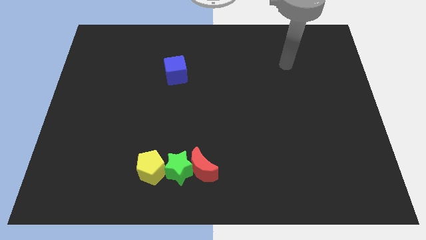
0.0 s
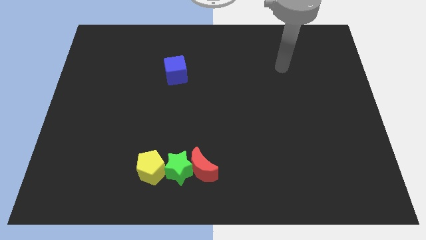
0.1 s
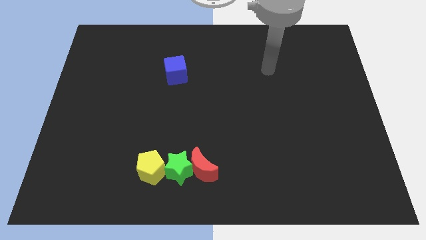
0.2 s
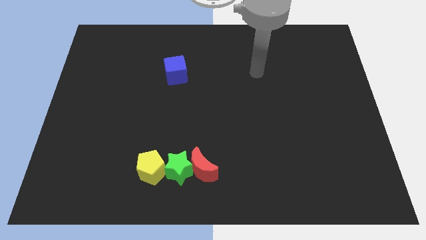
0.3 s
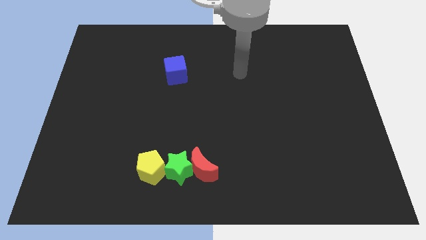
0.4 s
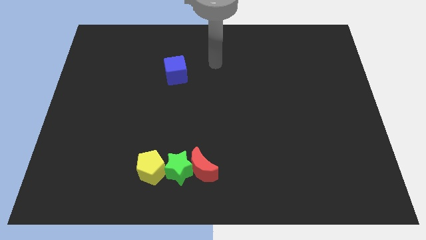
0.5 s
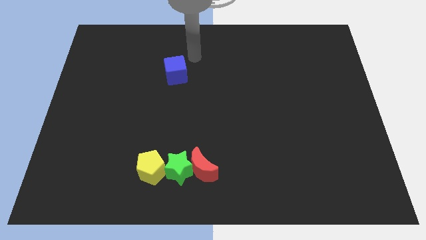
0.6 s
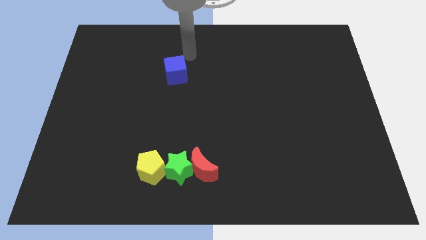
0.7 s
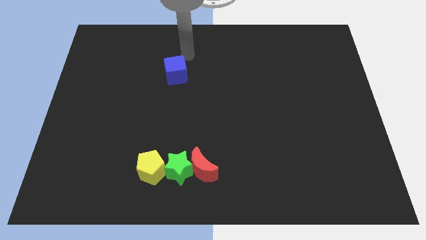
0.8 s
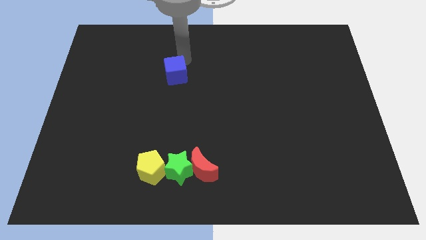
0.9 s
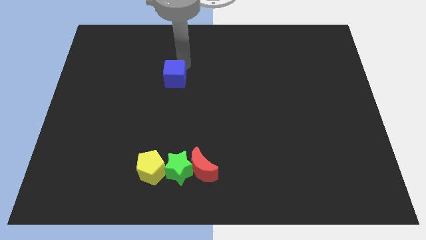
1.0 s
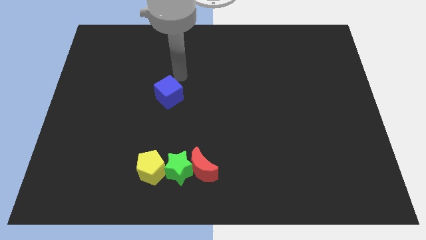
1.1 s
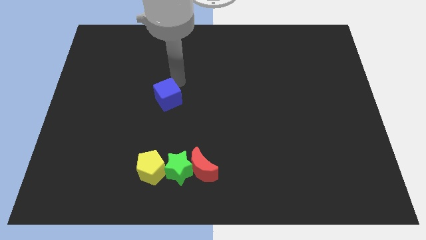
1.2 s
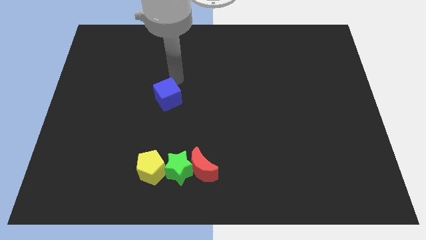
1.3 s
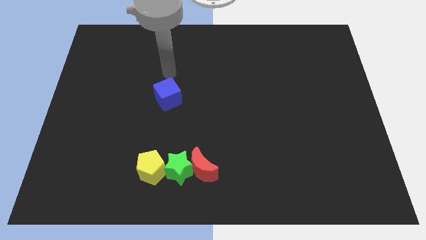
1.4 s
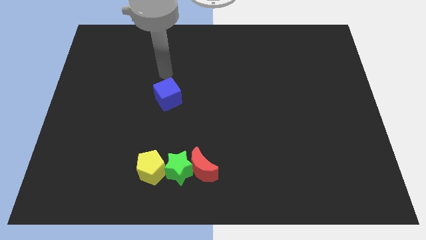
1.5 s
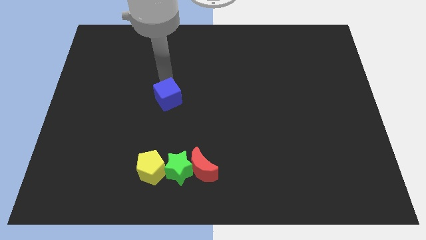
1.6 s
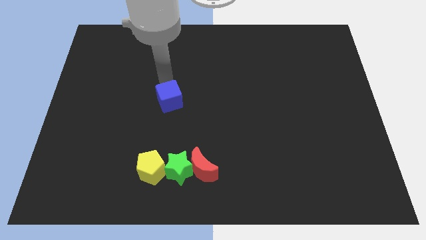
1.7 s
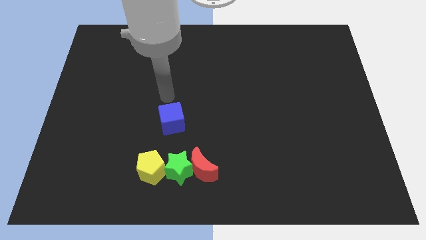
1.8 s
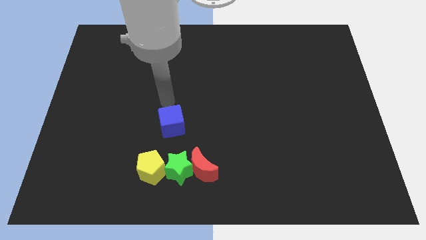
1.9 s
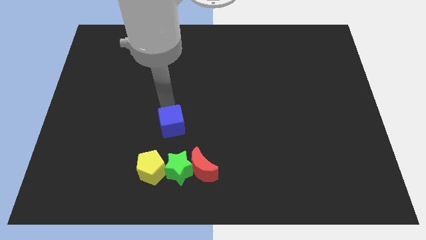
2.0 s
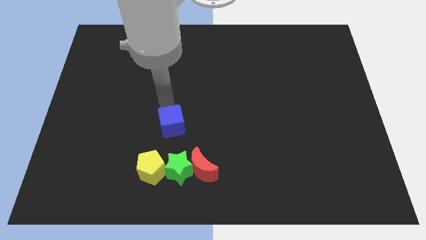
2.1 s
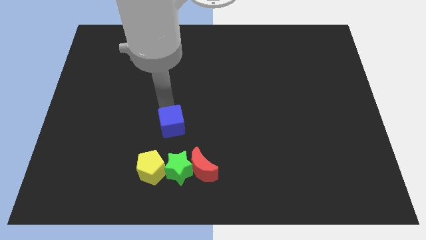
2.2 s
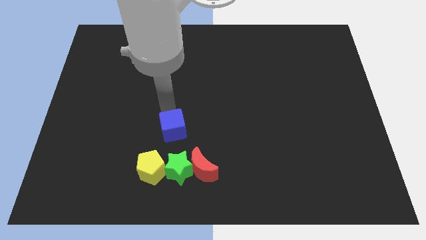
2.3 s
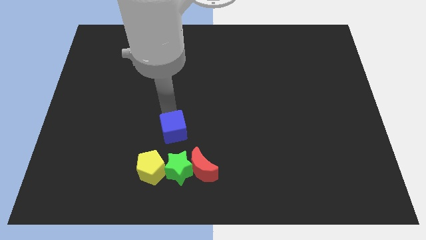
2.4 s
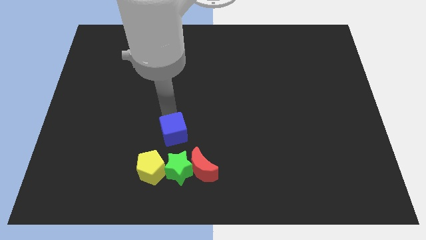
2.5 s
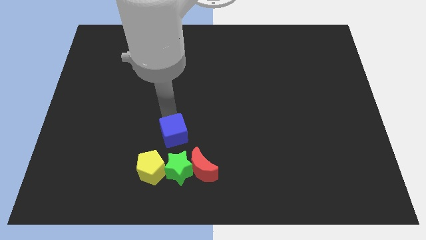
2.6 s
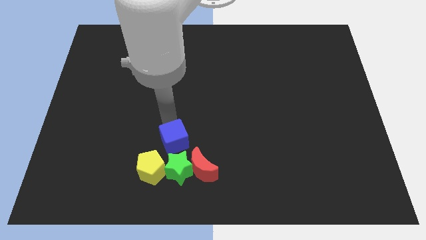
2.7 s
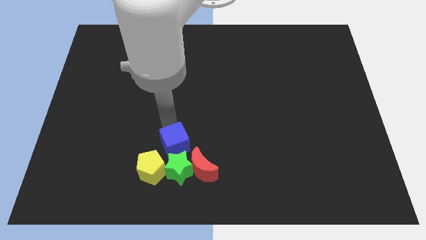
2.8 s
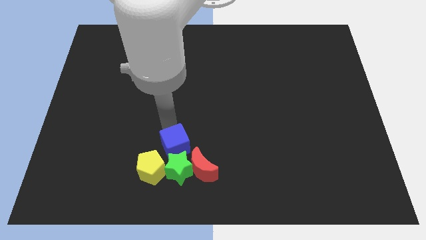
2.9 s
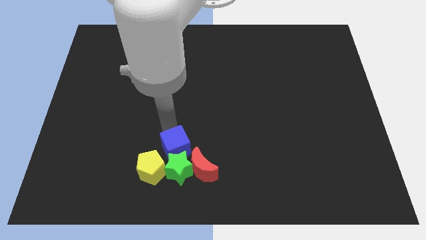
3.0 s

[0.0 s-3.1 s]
move the blue block next to the star

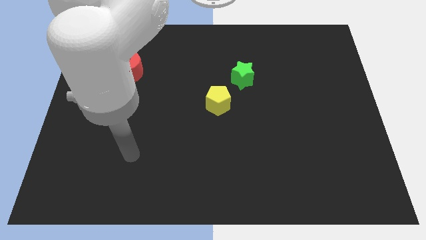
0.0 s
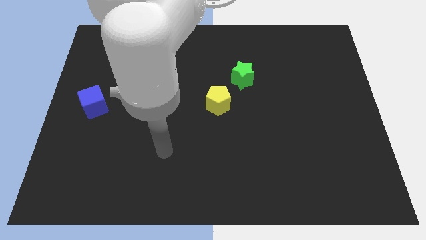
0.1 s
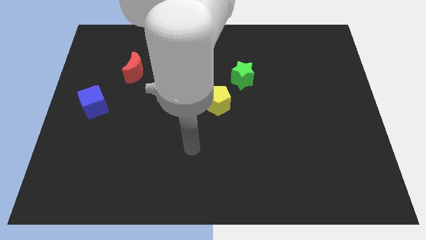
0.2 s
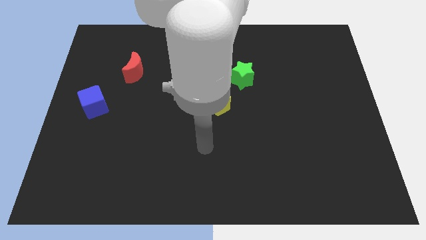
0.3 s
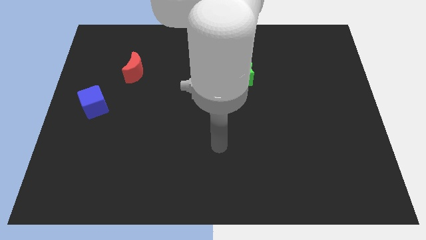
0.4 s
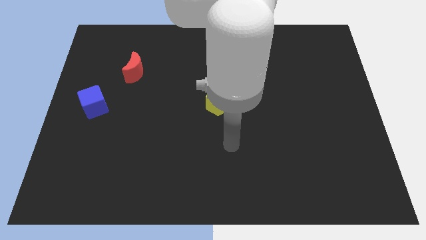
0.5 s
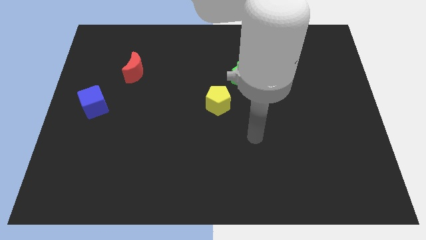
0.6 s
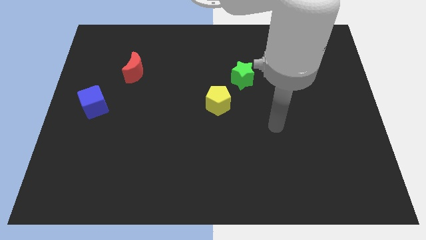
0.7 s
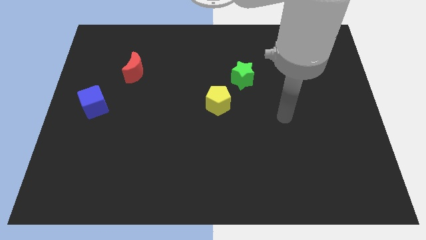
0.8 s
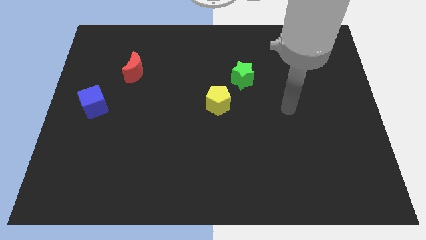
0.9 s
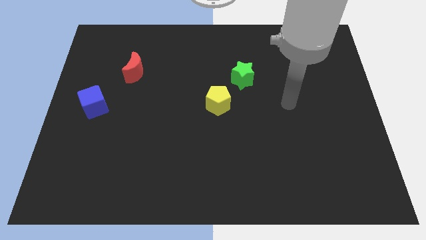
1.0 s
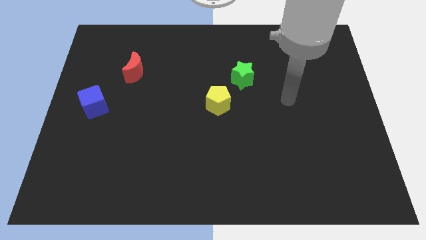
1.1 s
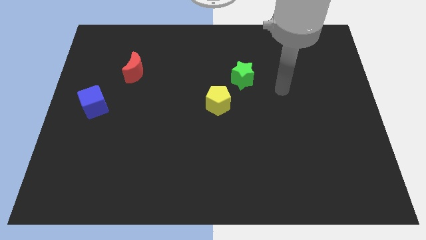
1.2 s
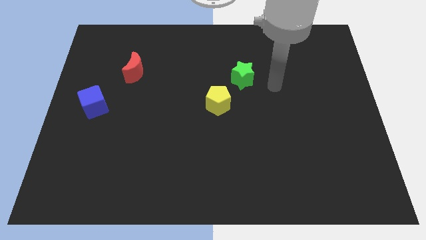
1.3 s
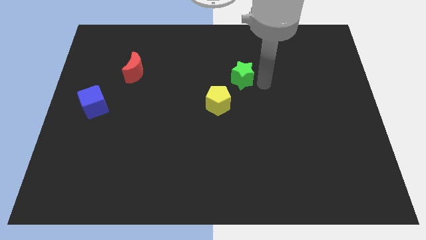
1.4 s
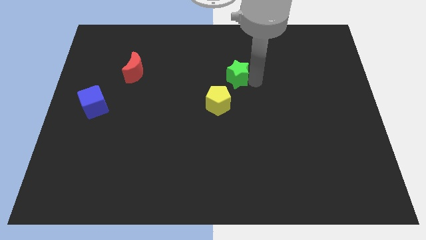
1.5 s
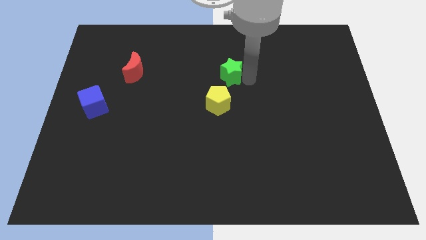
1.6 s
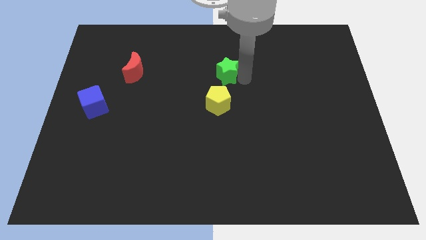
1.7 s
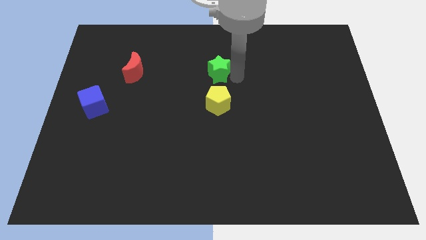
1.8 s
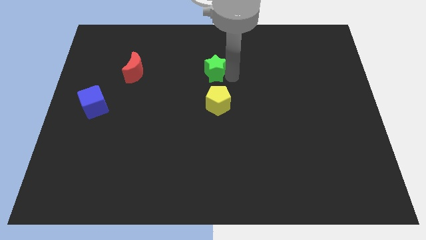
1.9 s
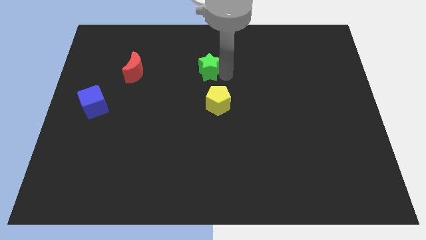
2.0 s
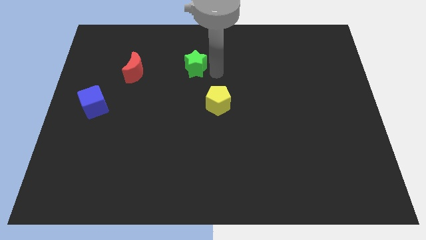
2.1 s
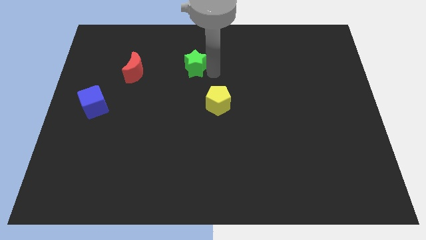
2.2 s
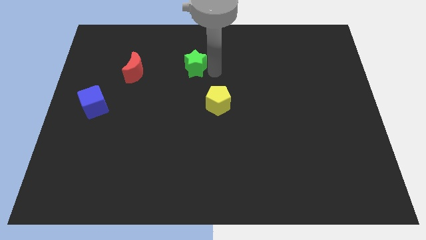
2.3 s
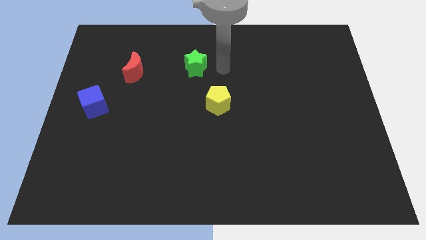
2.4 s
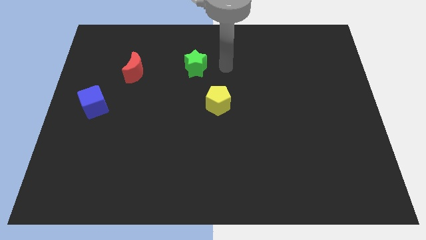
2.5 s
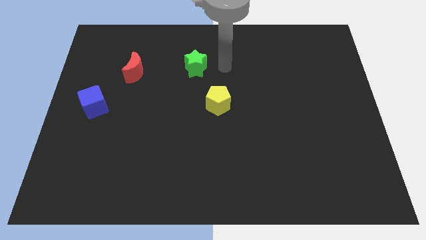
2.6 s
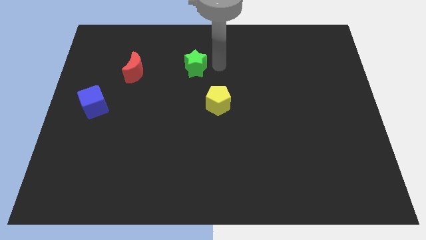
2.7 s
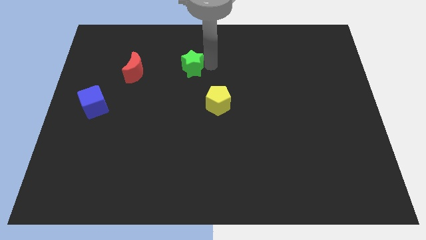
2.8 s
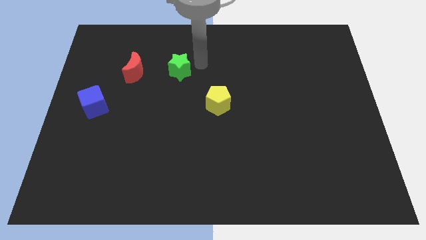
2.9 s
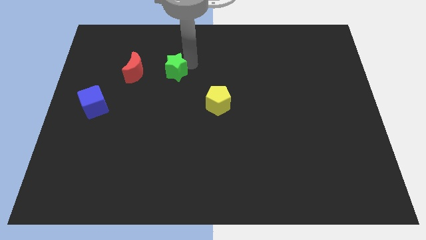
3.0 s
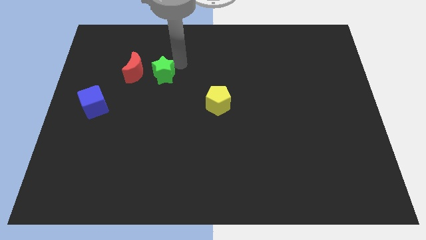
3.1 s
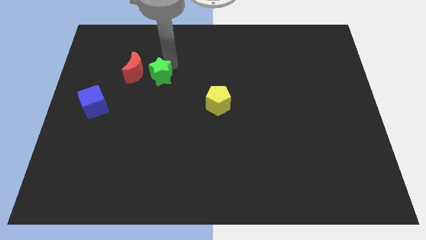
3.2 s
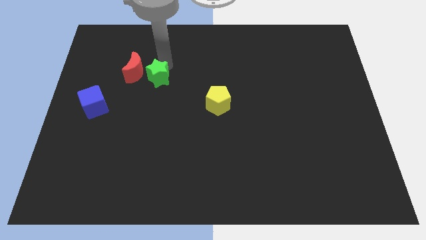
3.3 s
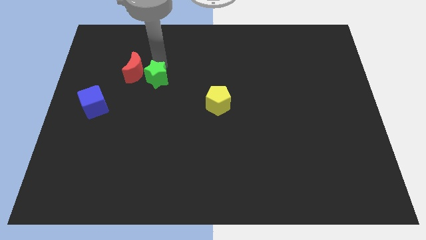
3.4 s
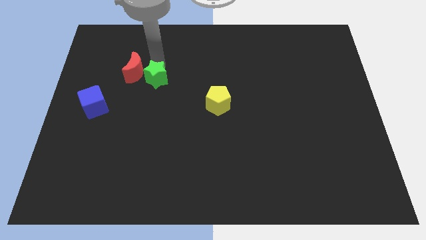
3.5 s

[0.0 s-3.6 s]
put the green block to the moon

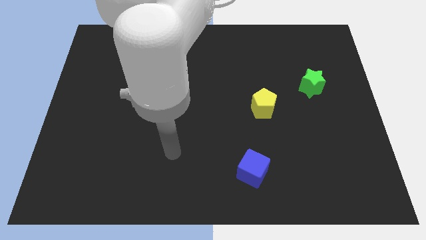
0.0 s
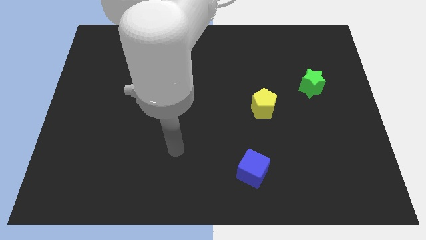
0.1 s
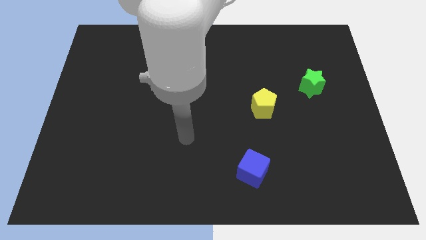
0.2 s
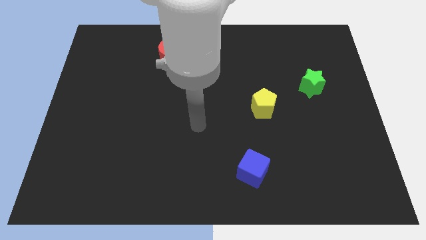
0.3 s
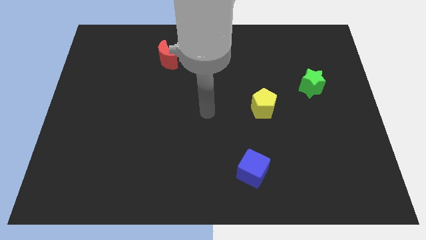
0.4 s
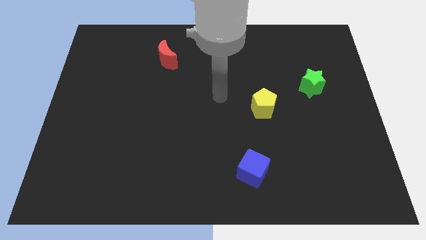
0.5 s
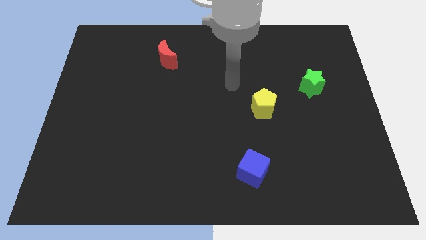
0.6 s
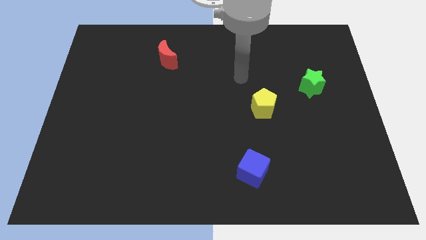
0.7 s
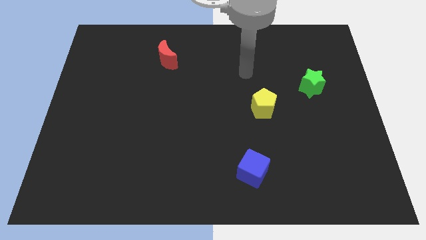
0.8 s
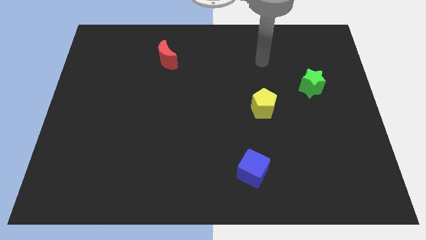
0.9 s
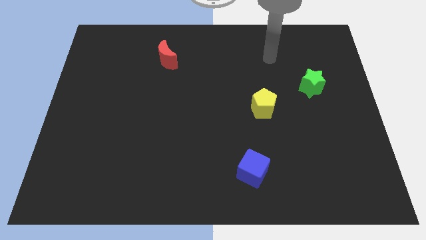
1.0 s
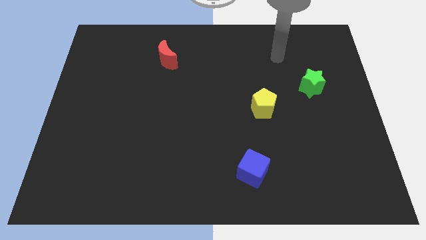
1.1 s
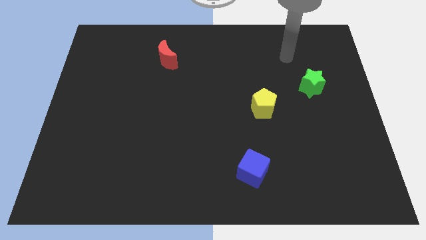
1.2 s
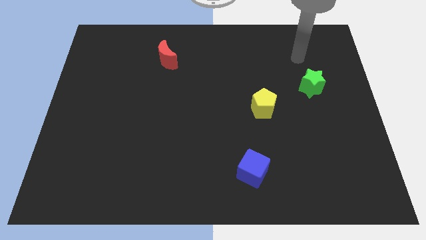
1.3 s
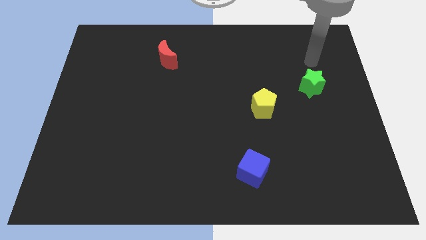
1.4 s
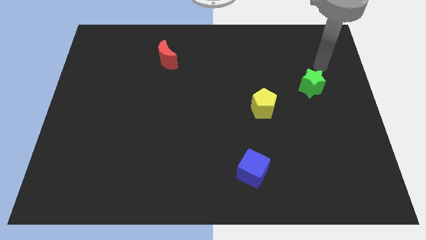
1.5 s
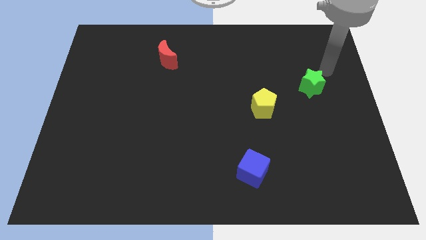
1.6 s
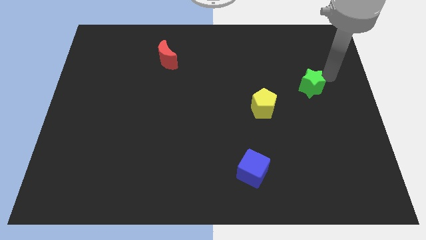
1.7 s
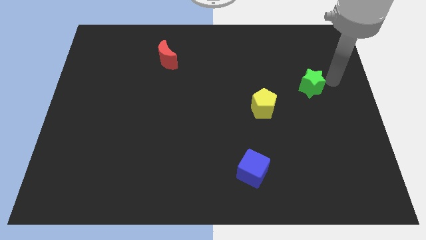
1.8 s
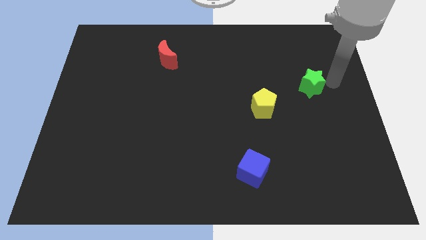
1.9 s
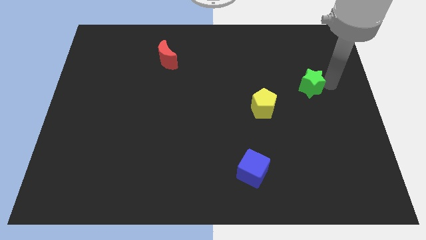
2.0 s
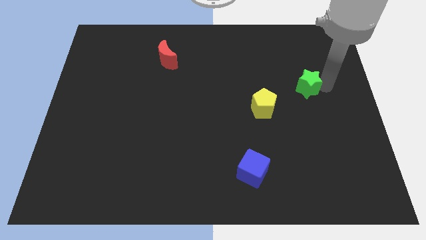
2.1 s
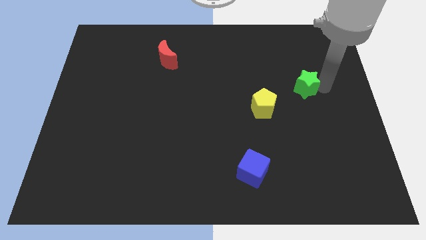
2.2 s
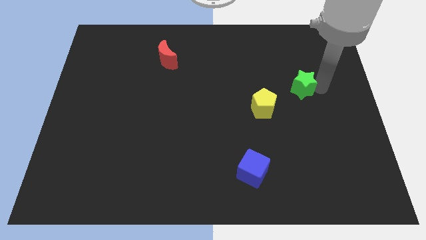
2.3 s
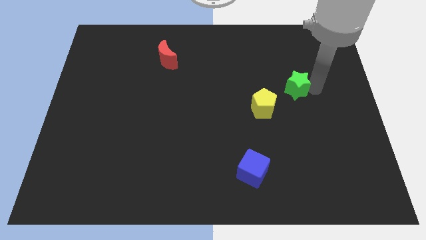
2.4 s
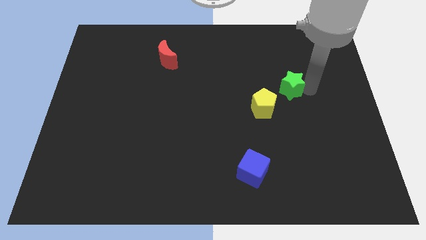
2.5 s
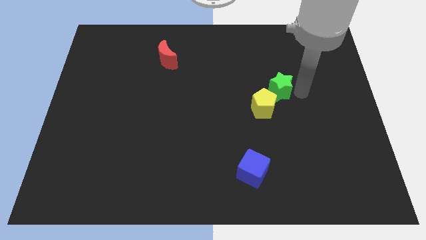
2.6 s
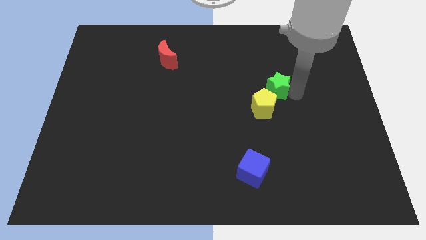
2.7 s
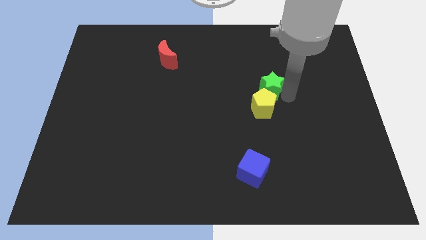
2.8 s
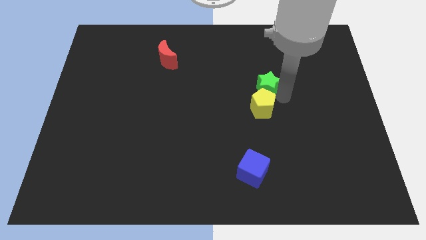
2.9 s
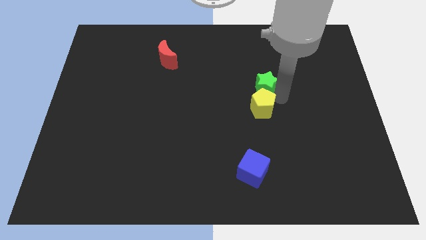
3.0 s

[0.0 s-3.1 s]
move the green block close to the pentagon
